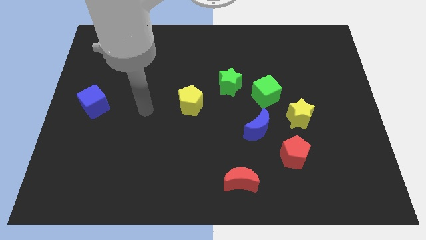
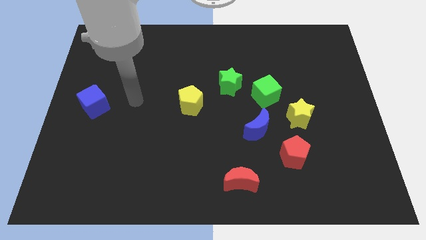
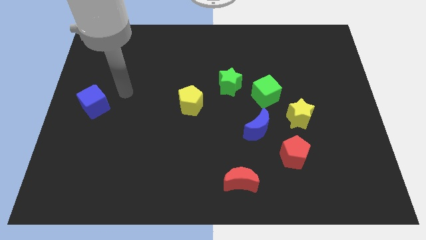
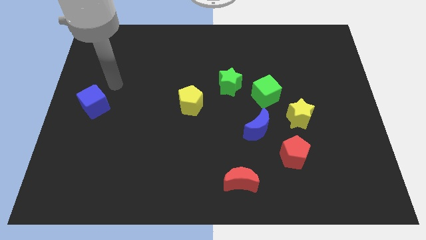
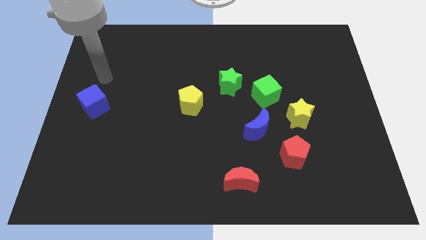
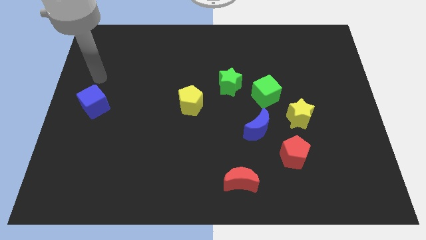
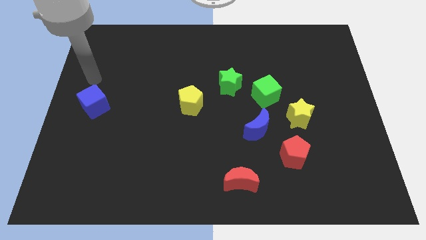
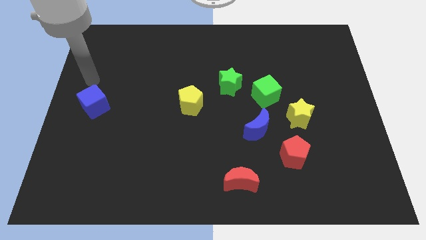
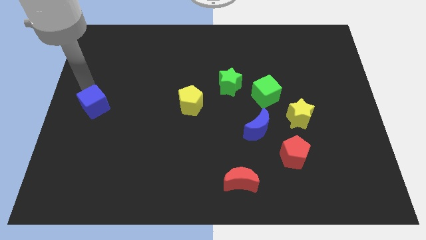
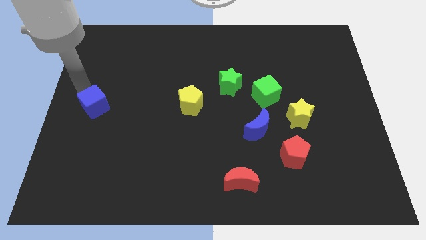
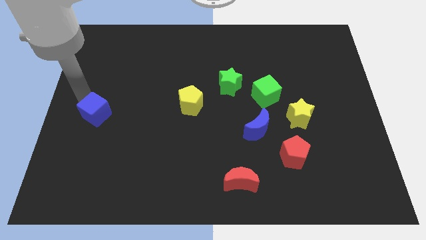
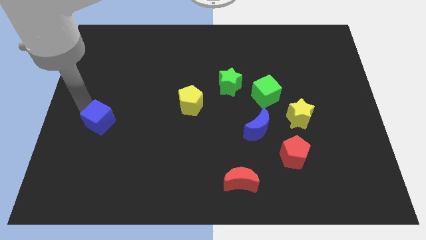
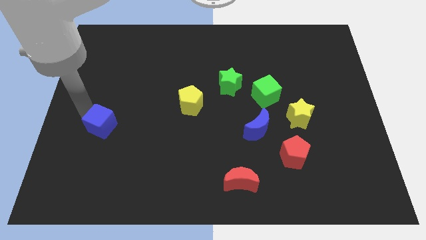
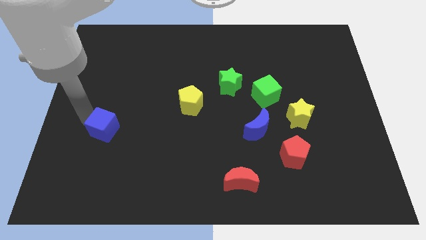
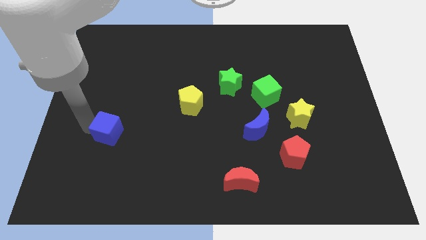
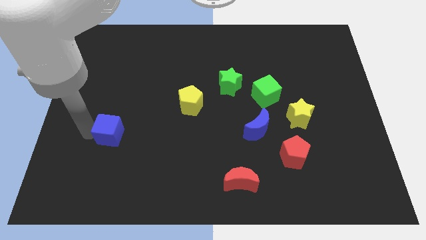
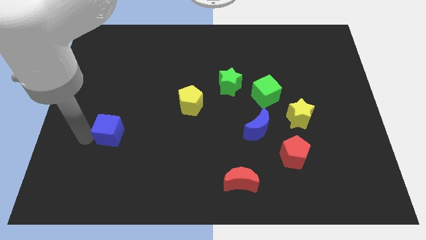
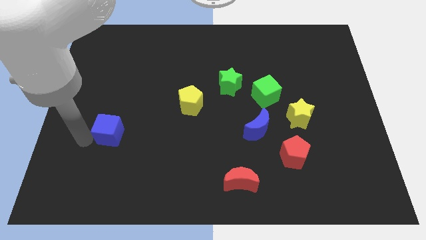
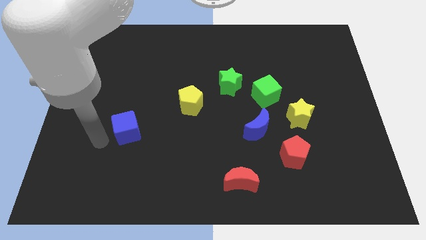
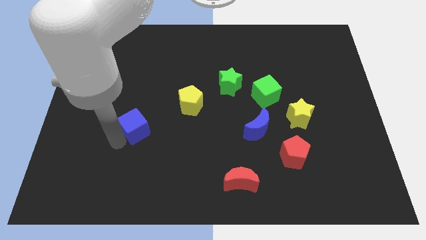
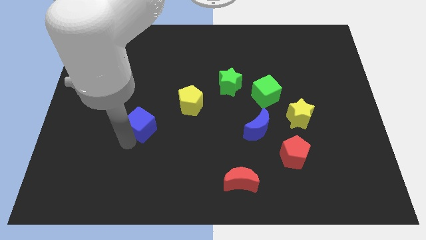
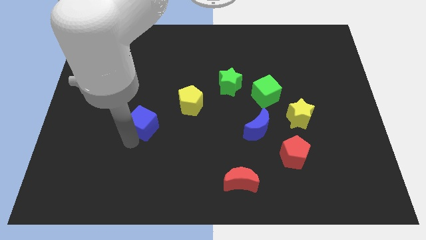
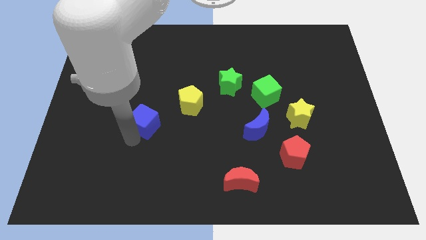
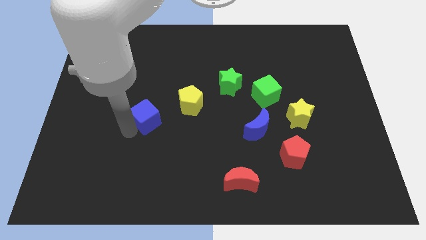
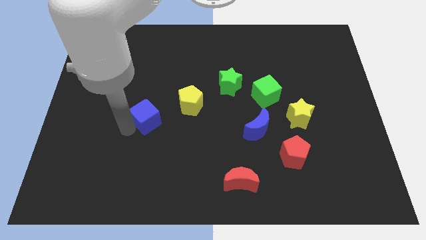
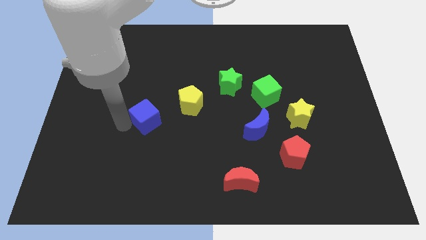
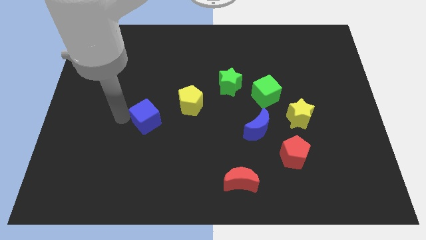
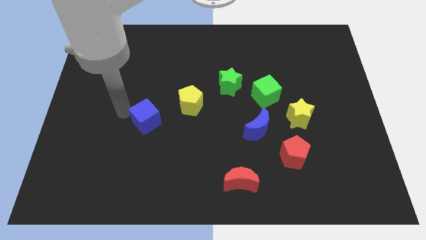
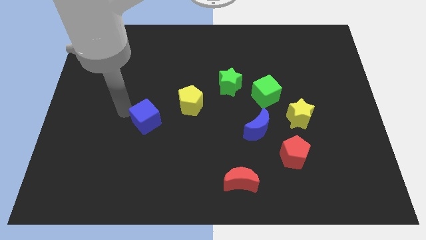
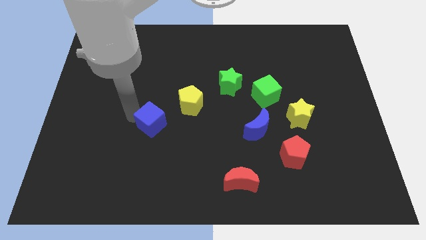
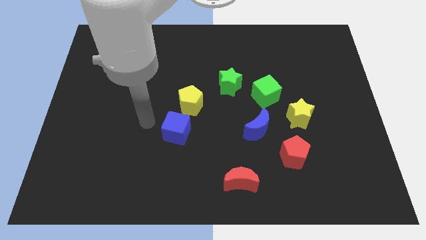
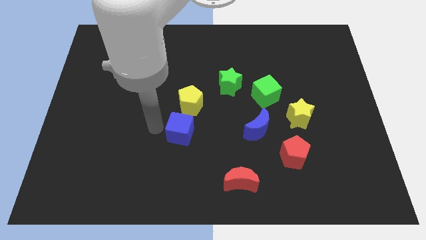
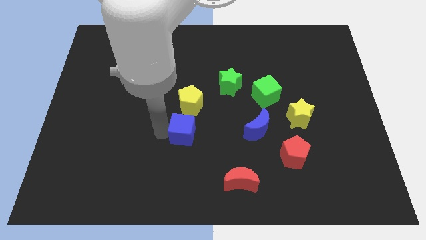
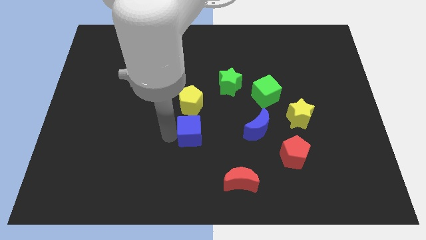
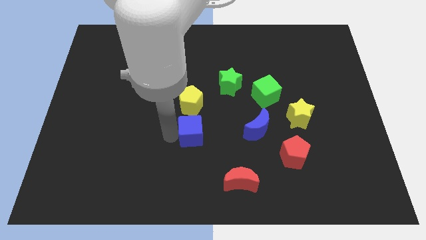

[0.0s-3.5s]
move the blue cube below the yellow pentagon

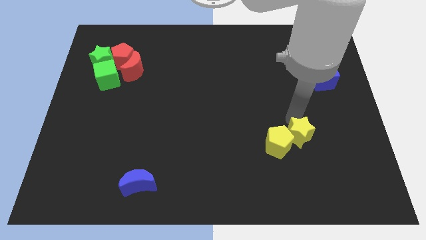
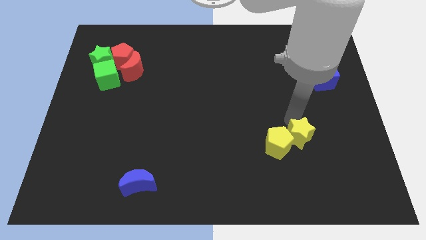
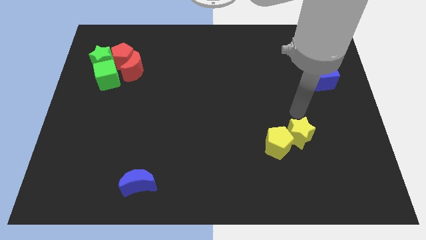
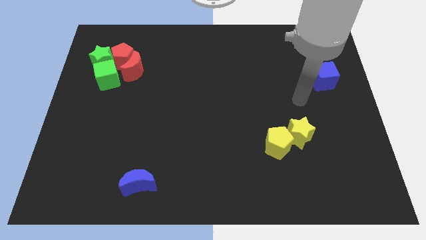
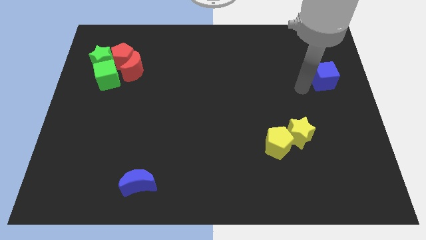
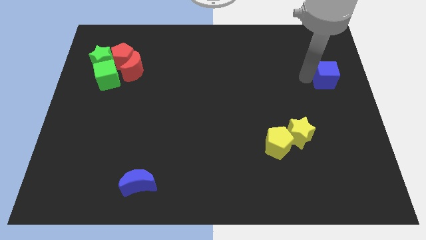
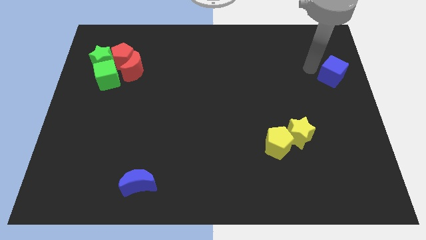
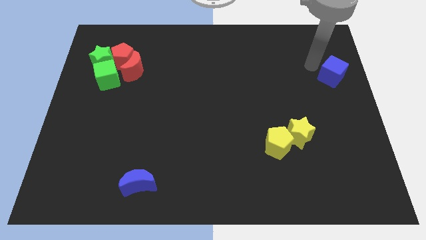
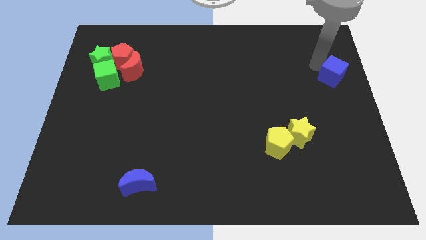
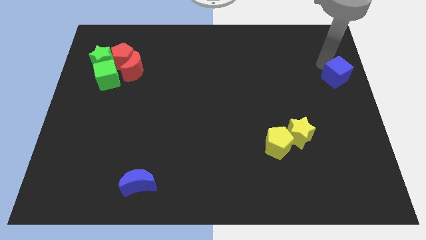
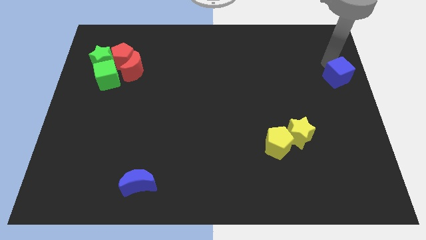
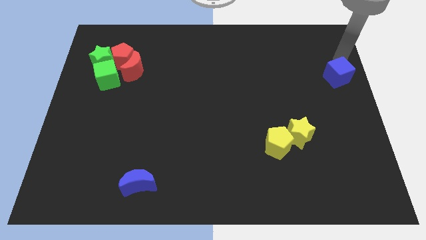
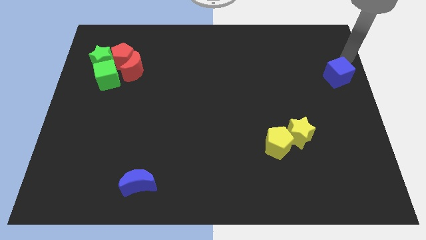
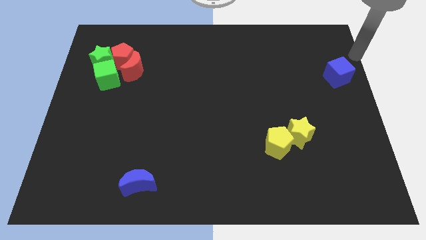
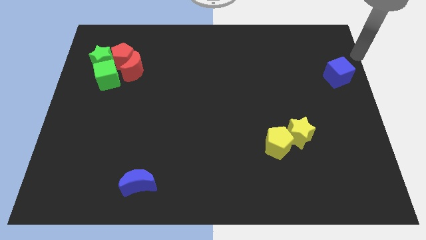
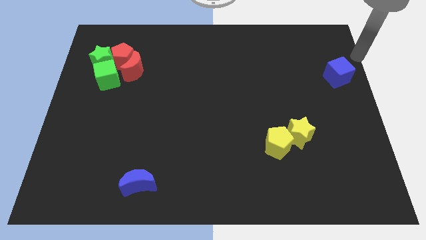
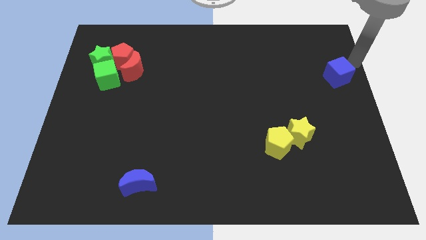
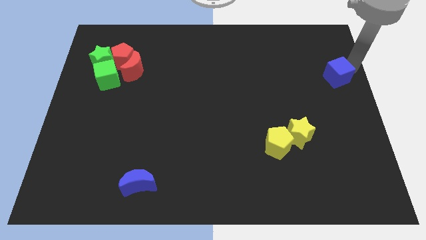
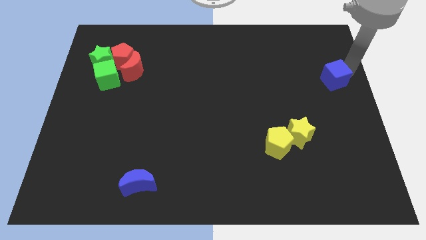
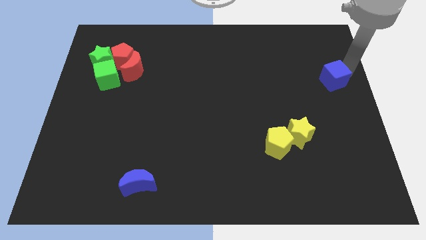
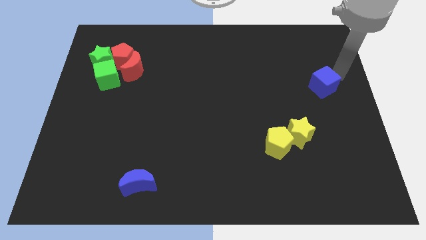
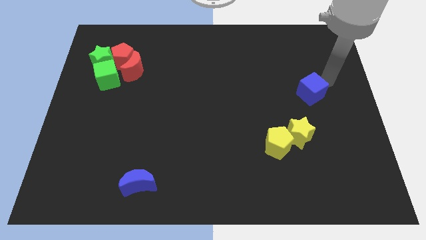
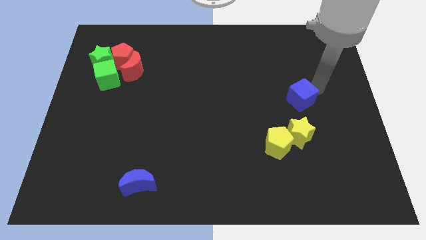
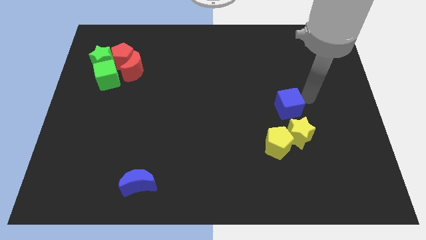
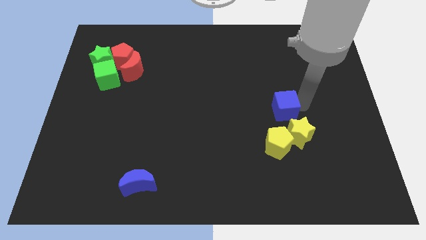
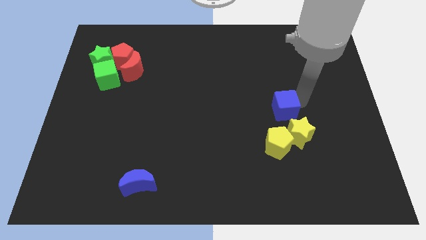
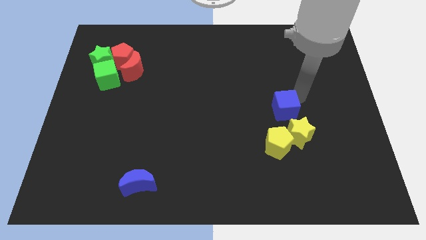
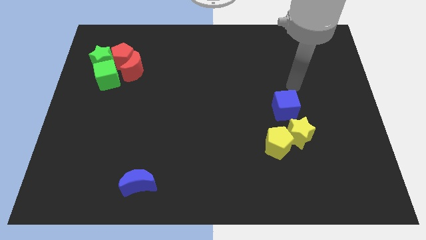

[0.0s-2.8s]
move the blue cube towards the group of yellow blocks

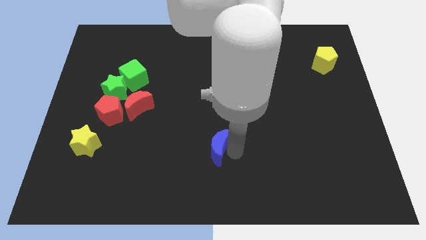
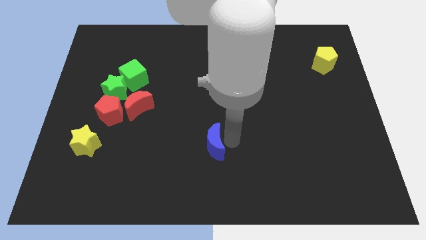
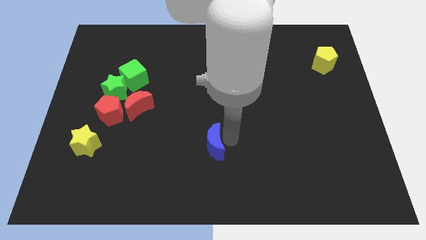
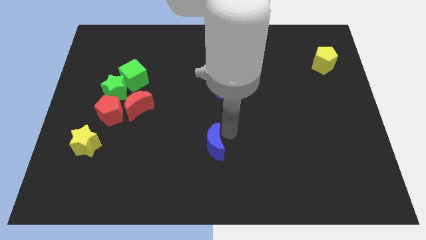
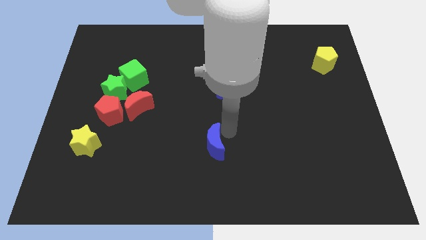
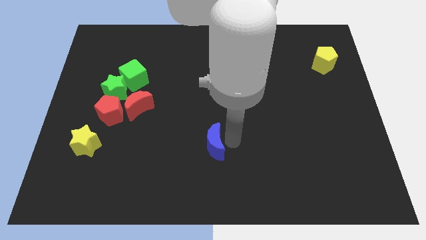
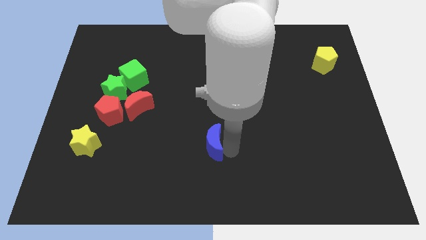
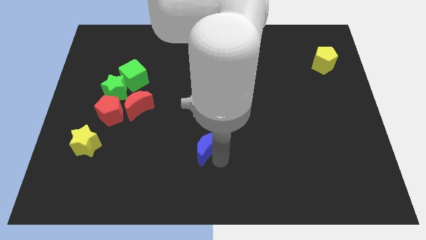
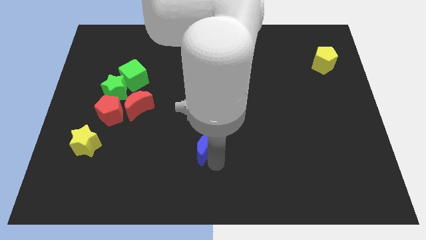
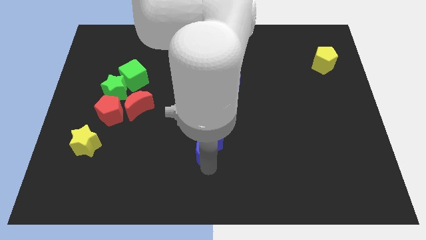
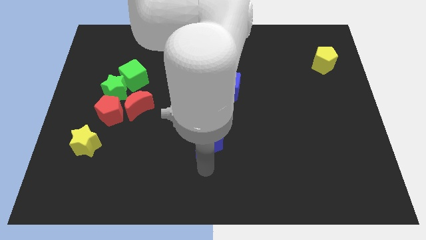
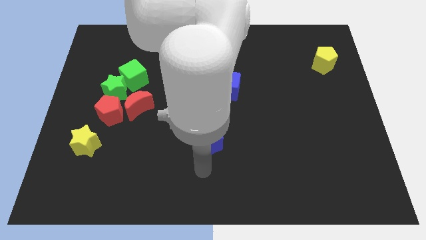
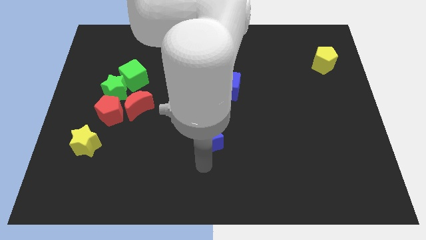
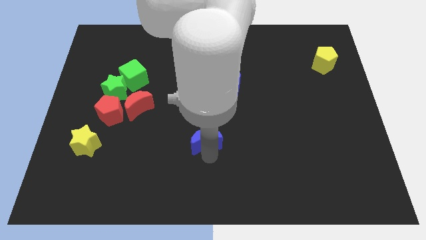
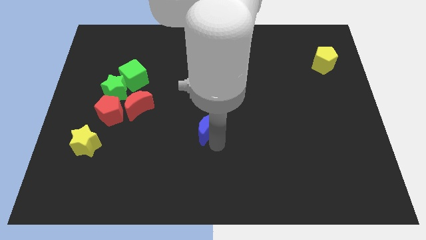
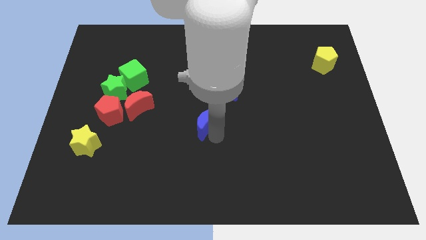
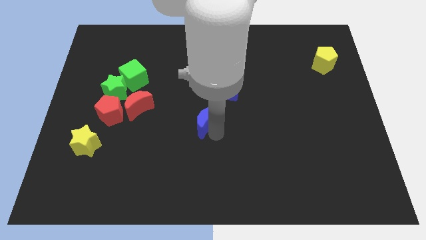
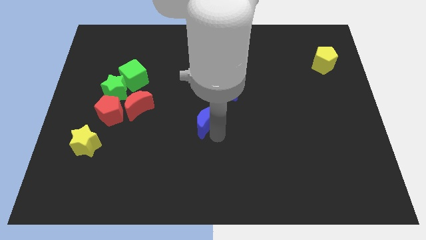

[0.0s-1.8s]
move the blue crescent diagonally bottom left to the blue cube

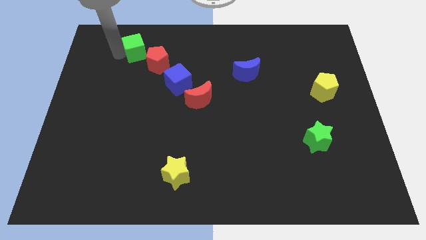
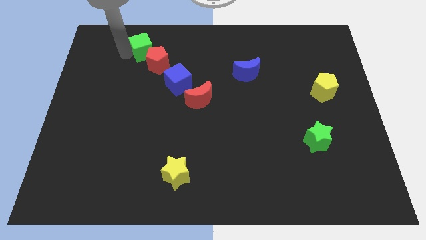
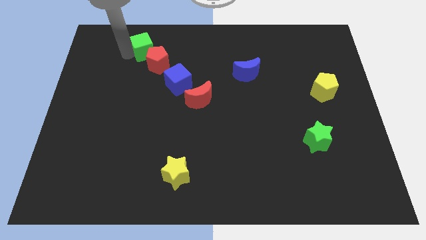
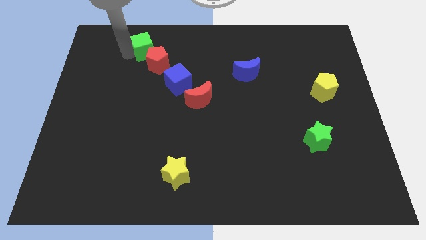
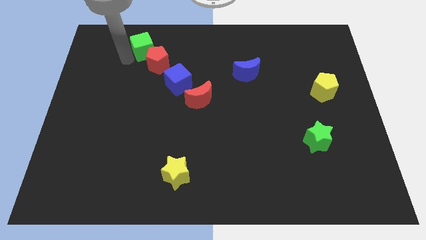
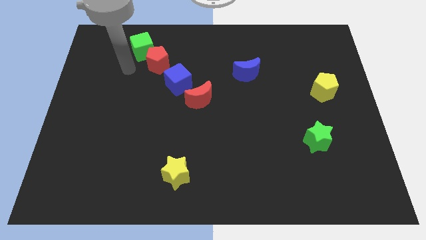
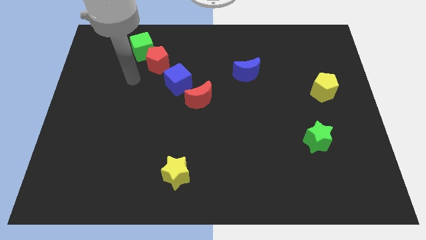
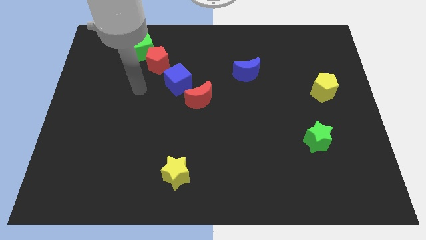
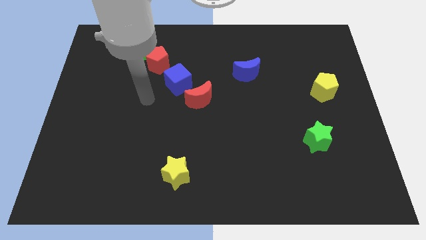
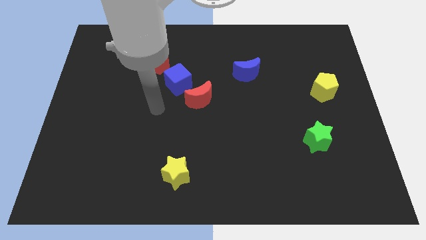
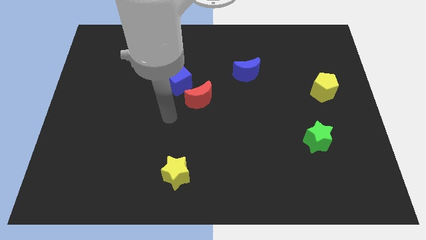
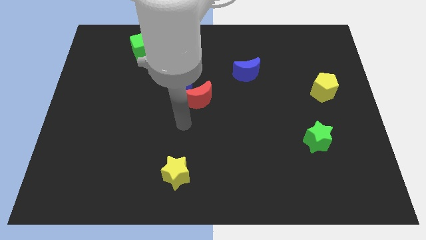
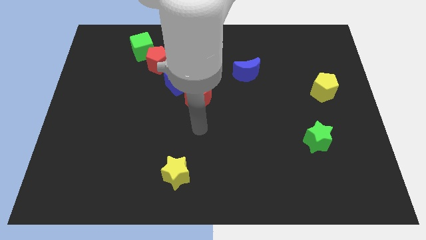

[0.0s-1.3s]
move your arm away from the green cube
